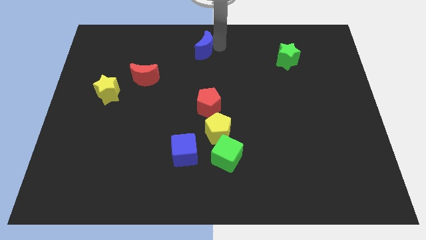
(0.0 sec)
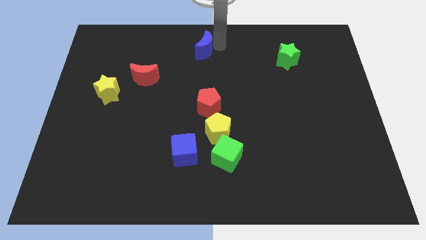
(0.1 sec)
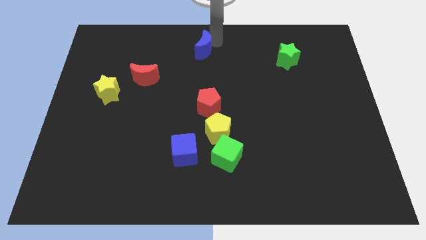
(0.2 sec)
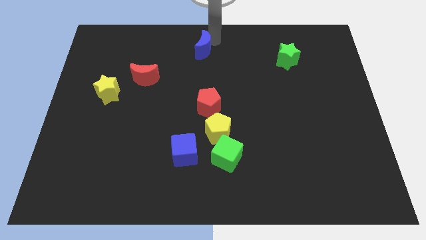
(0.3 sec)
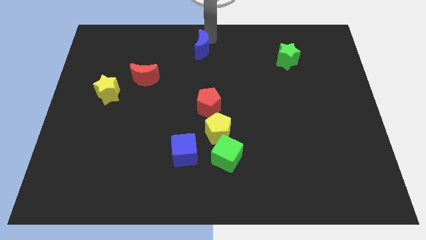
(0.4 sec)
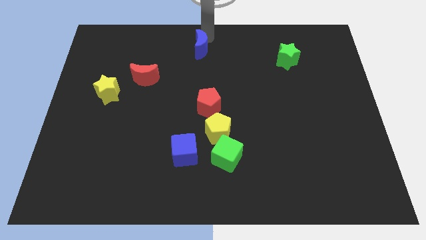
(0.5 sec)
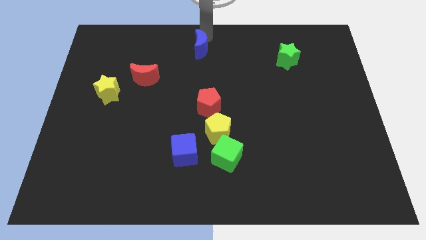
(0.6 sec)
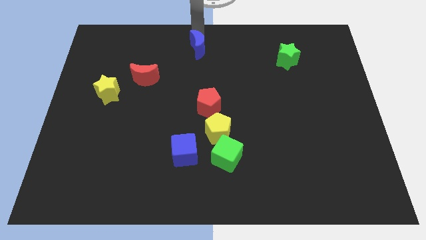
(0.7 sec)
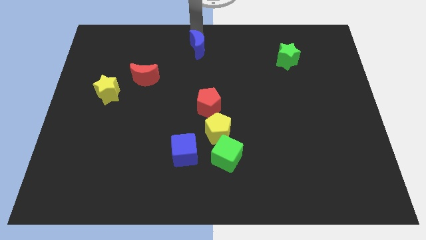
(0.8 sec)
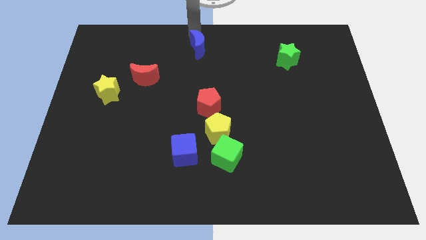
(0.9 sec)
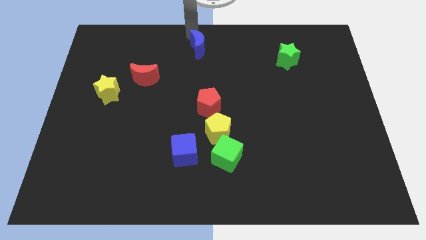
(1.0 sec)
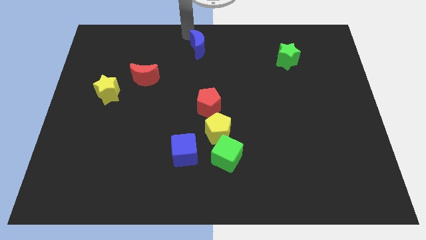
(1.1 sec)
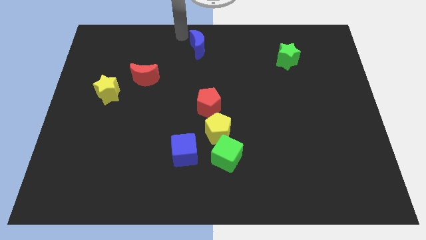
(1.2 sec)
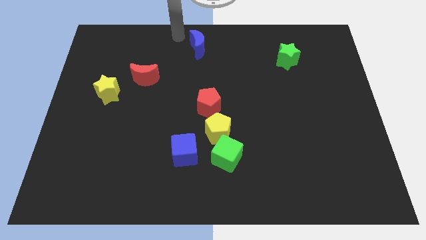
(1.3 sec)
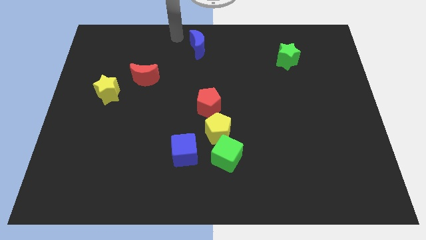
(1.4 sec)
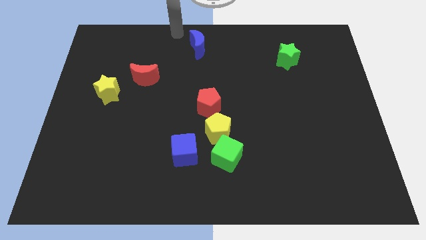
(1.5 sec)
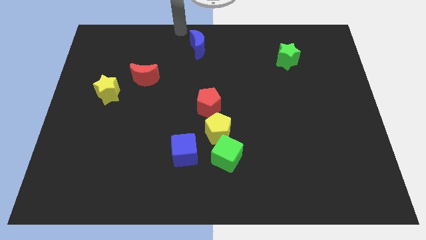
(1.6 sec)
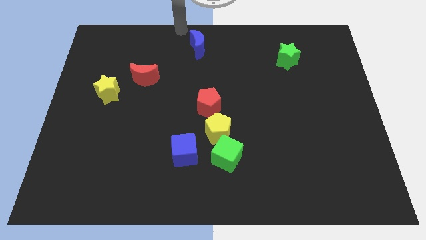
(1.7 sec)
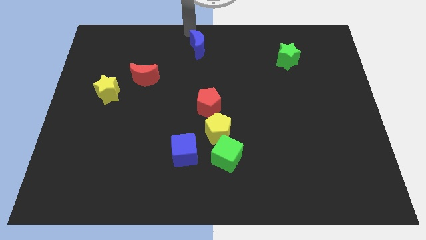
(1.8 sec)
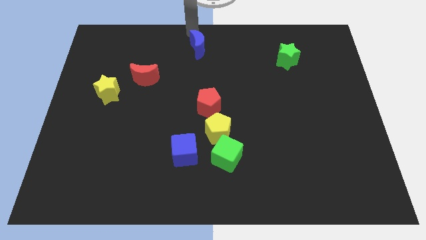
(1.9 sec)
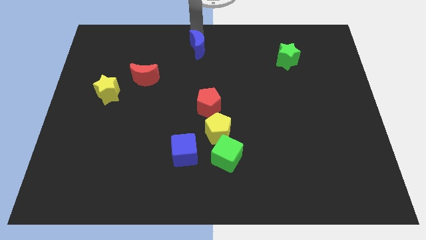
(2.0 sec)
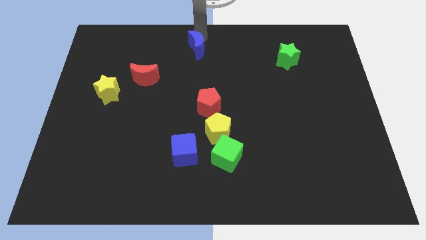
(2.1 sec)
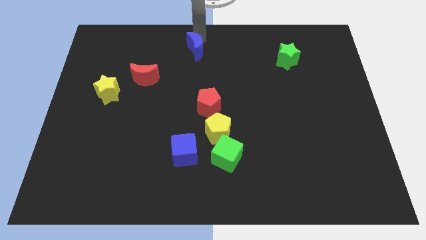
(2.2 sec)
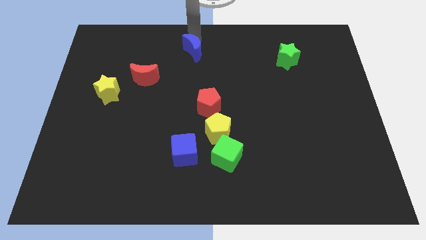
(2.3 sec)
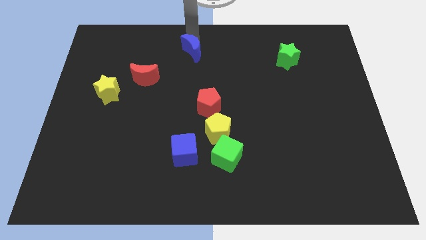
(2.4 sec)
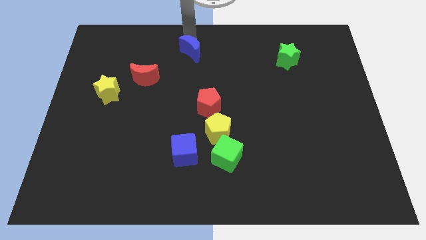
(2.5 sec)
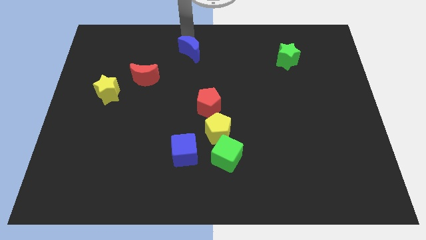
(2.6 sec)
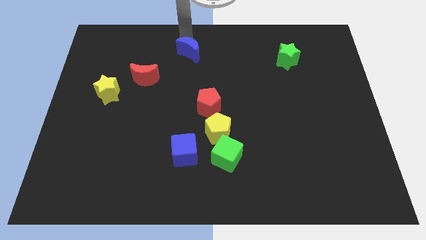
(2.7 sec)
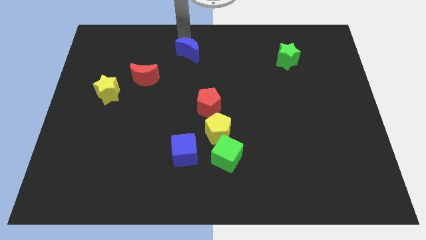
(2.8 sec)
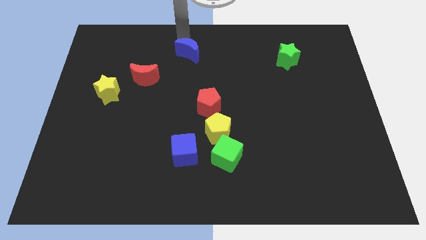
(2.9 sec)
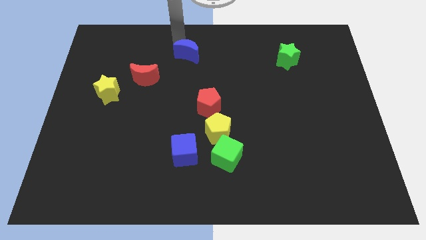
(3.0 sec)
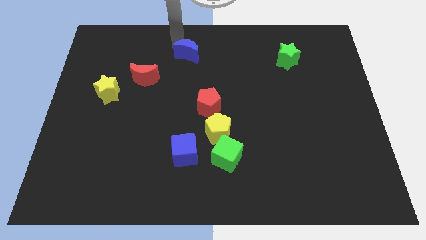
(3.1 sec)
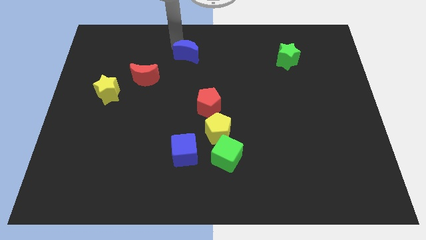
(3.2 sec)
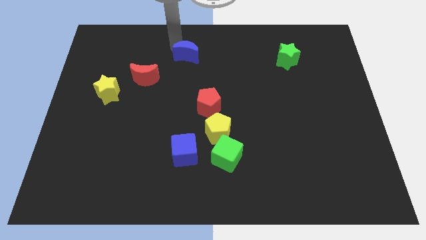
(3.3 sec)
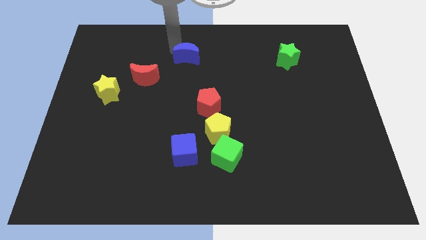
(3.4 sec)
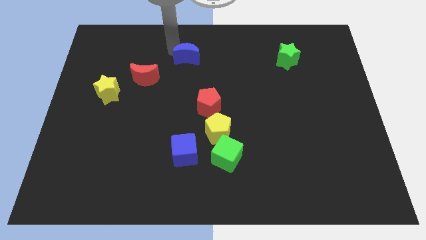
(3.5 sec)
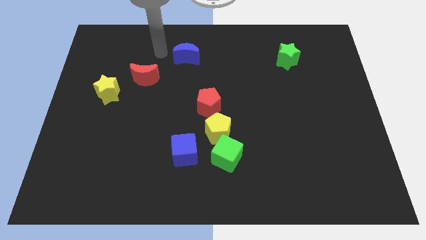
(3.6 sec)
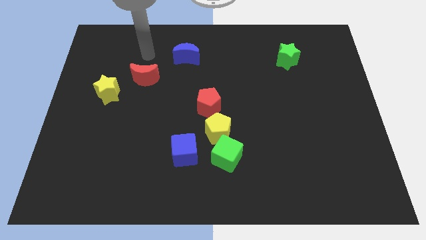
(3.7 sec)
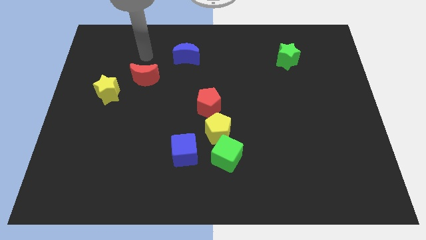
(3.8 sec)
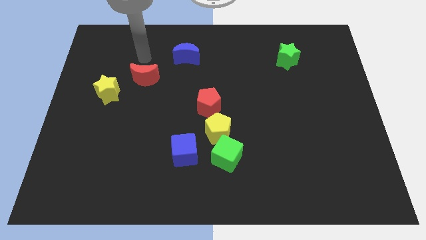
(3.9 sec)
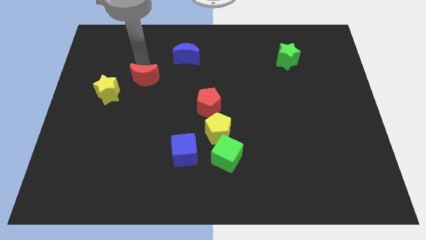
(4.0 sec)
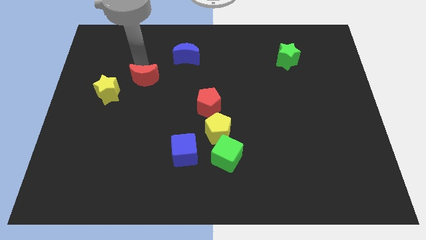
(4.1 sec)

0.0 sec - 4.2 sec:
place the blue moon to the top right of red moon

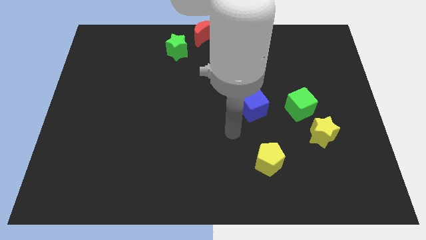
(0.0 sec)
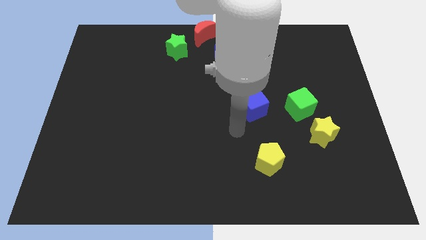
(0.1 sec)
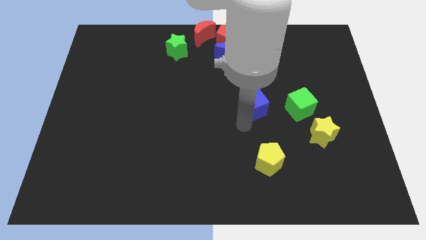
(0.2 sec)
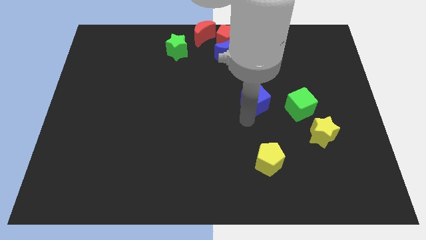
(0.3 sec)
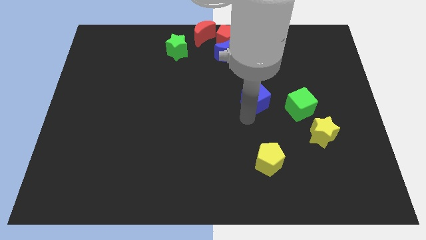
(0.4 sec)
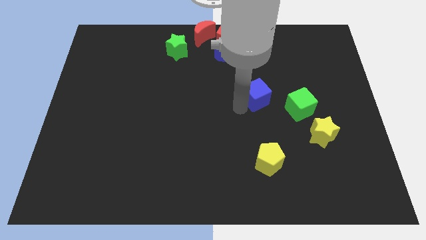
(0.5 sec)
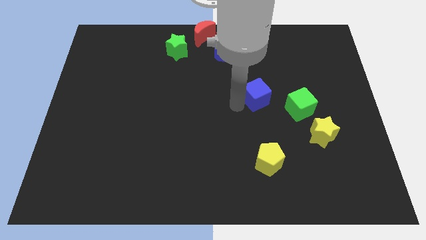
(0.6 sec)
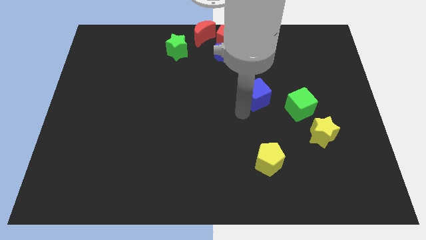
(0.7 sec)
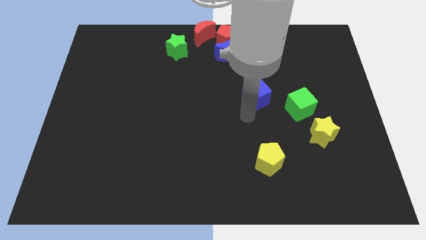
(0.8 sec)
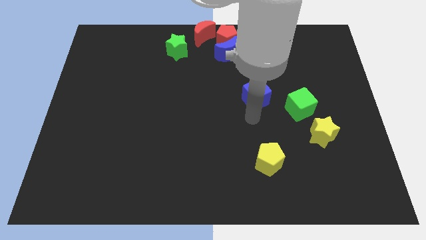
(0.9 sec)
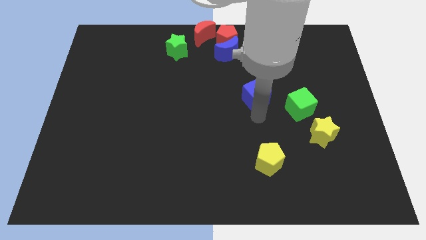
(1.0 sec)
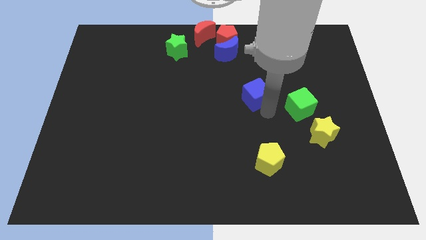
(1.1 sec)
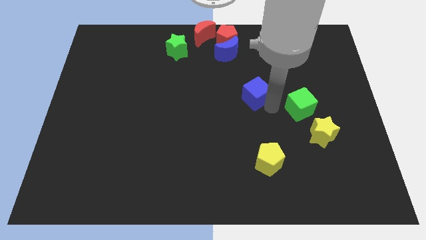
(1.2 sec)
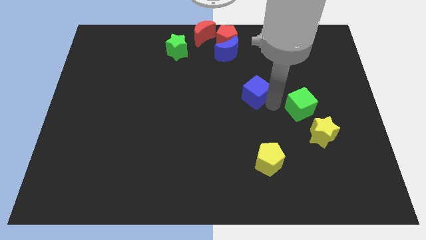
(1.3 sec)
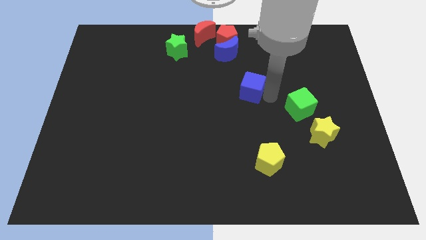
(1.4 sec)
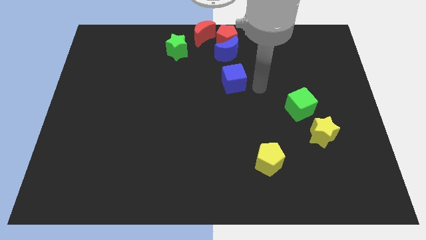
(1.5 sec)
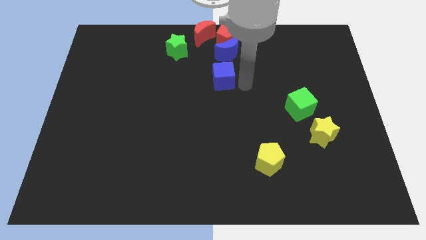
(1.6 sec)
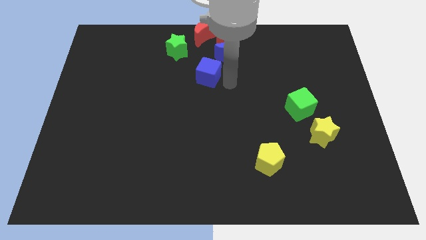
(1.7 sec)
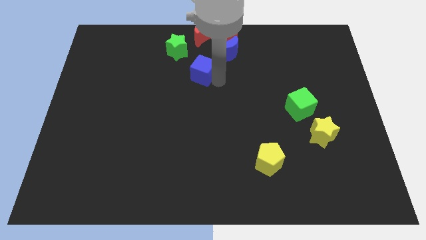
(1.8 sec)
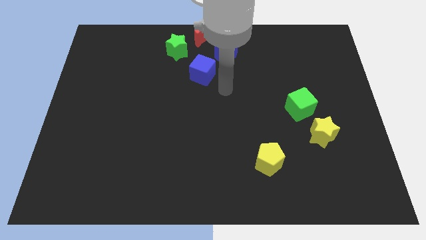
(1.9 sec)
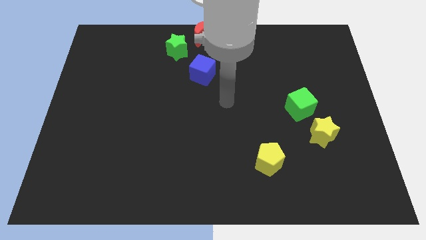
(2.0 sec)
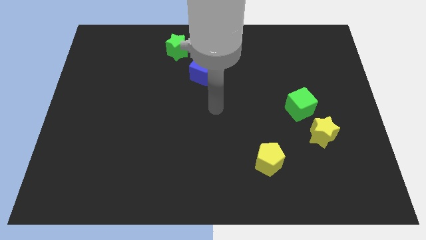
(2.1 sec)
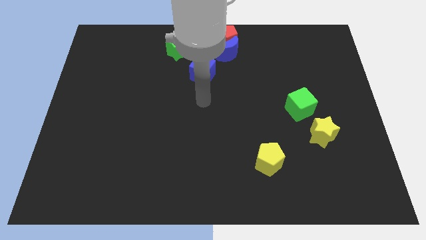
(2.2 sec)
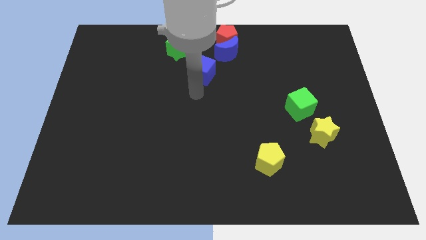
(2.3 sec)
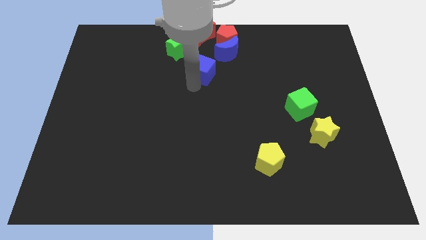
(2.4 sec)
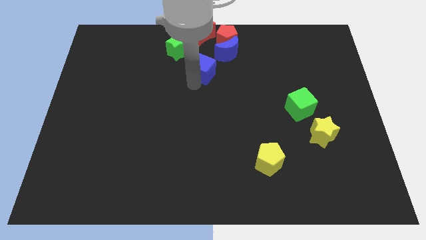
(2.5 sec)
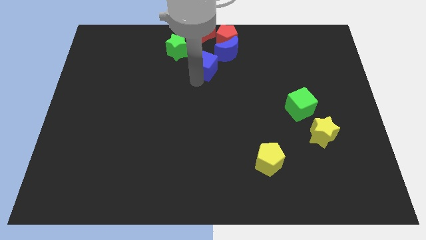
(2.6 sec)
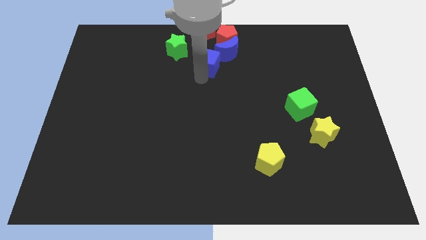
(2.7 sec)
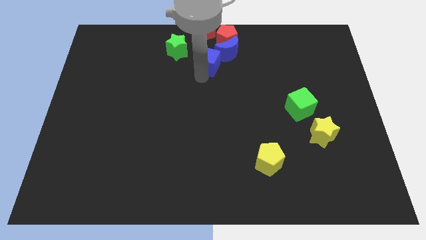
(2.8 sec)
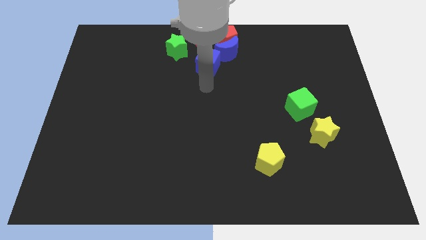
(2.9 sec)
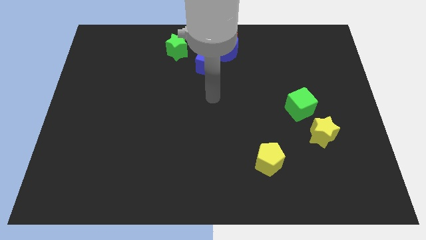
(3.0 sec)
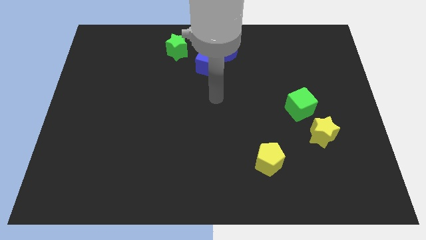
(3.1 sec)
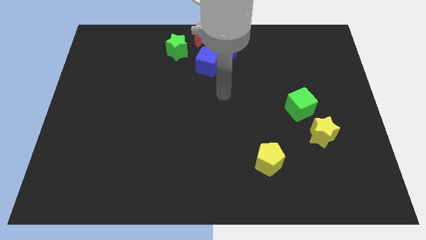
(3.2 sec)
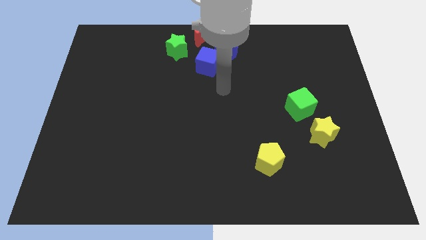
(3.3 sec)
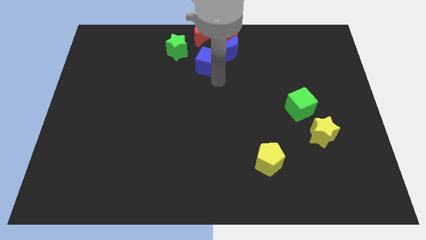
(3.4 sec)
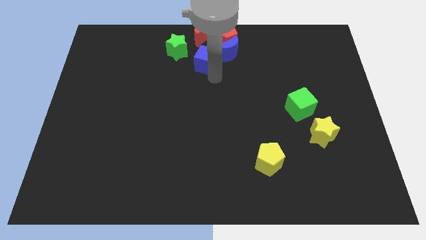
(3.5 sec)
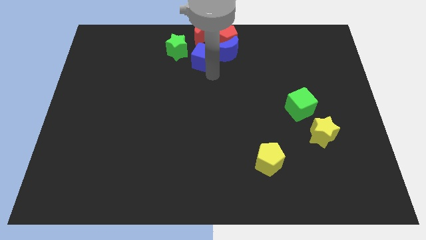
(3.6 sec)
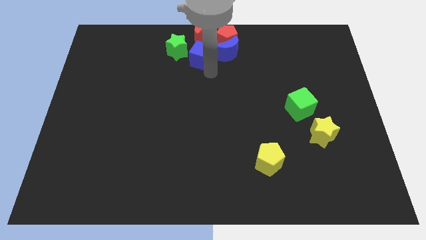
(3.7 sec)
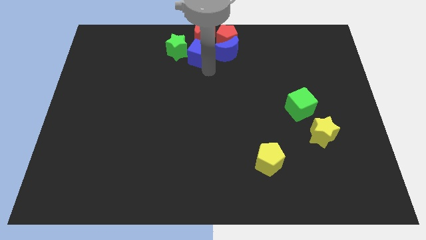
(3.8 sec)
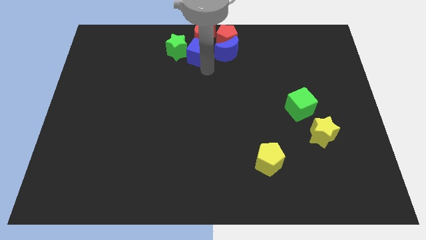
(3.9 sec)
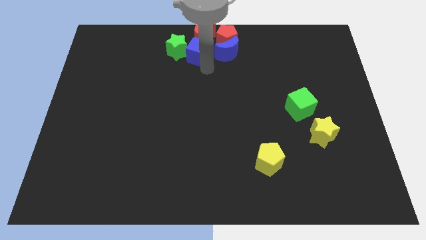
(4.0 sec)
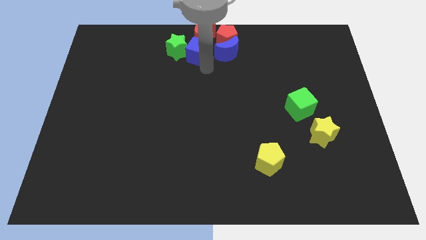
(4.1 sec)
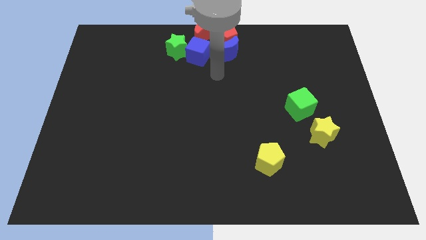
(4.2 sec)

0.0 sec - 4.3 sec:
place the blue cube to the left of the blue moon

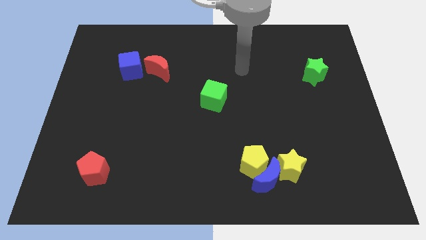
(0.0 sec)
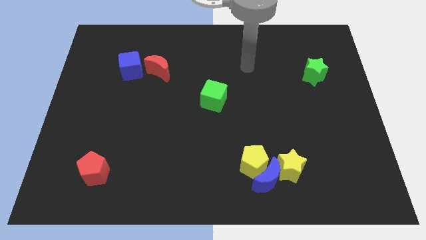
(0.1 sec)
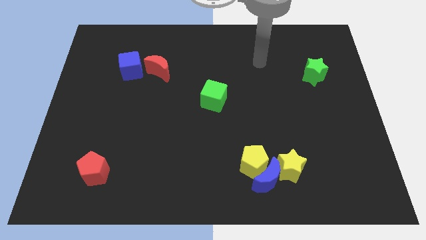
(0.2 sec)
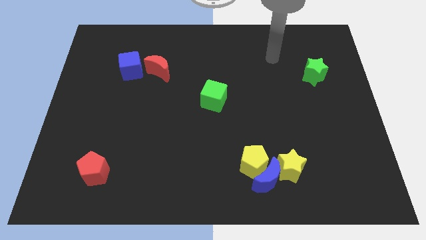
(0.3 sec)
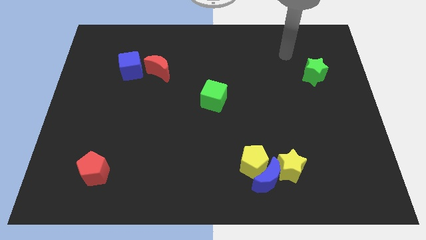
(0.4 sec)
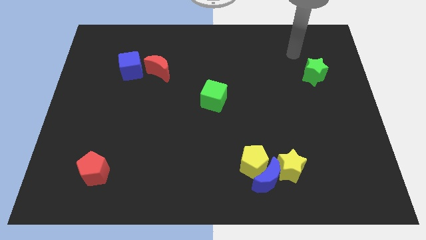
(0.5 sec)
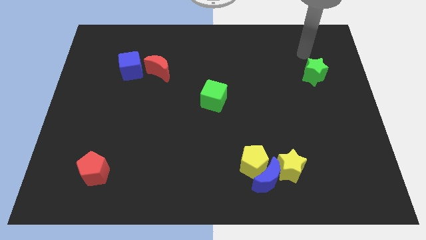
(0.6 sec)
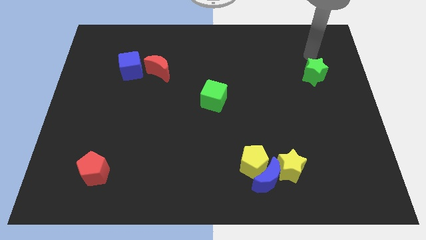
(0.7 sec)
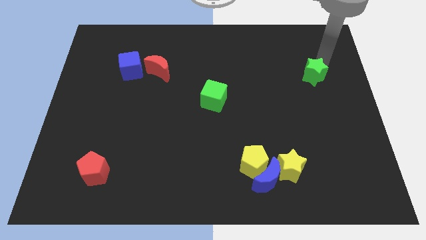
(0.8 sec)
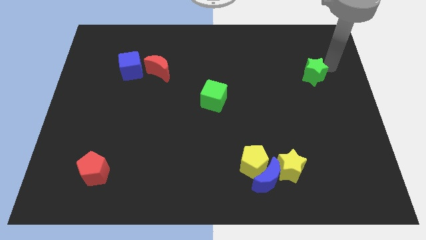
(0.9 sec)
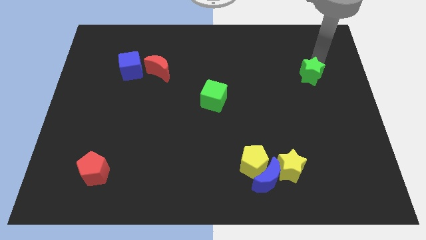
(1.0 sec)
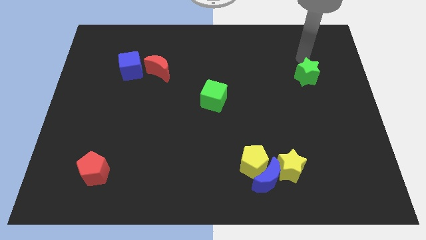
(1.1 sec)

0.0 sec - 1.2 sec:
slightly push the green star on the board
